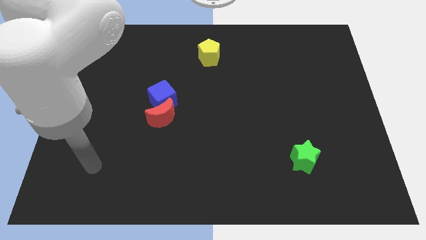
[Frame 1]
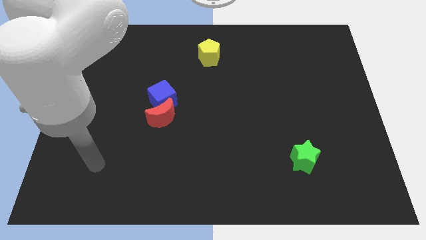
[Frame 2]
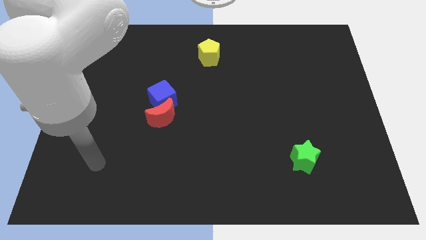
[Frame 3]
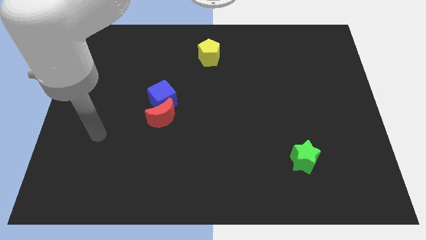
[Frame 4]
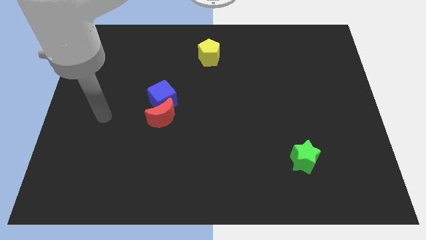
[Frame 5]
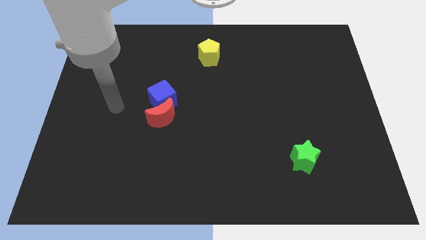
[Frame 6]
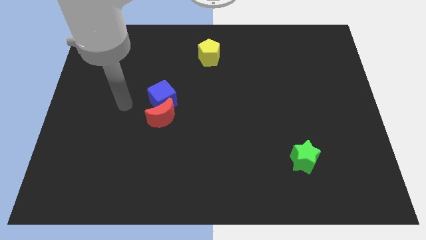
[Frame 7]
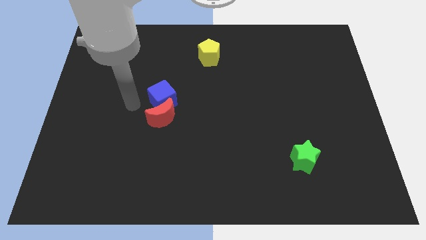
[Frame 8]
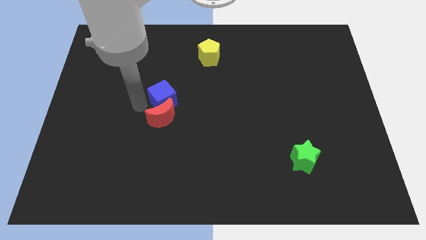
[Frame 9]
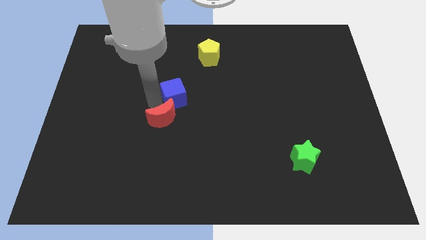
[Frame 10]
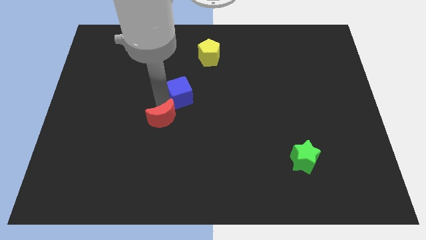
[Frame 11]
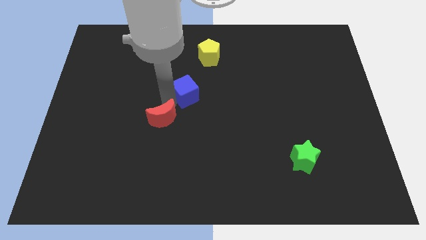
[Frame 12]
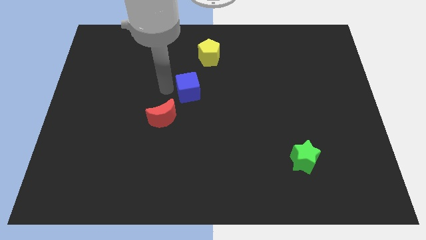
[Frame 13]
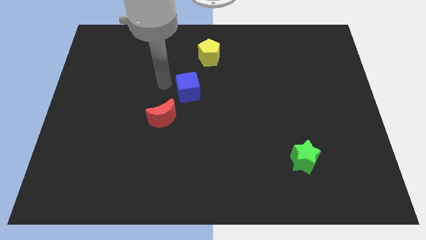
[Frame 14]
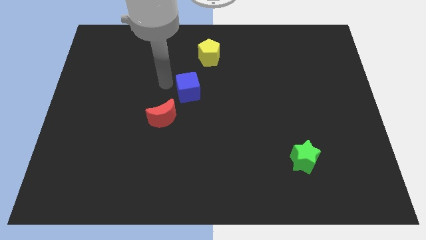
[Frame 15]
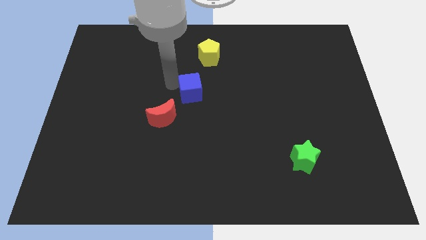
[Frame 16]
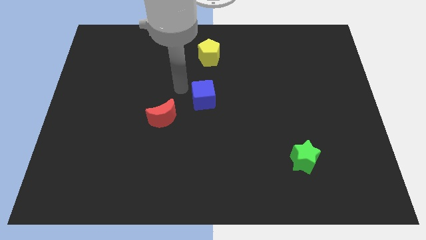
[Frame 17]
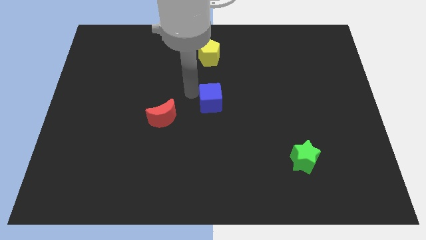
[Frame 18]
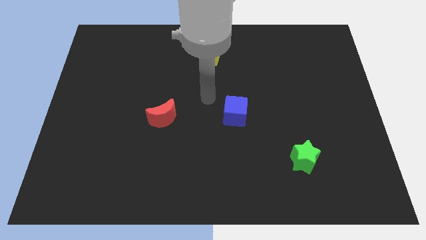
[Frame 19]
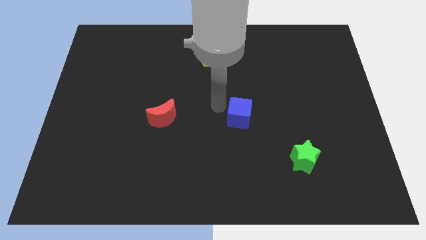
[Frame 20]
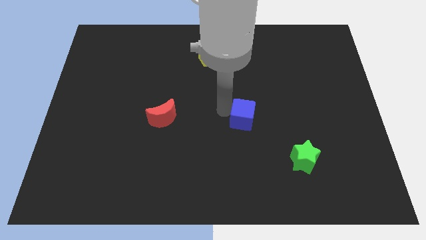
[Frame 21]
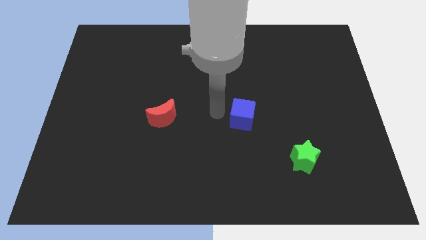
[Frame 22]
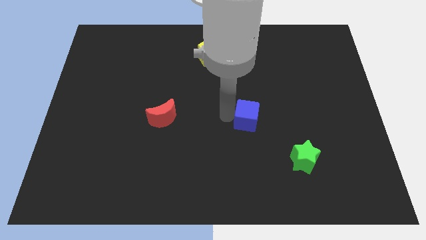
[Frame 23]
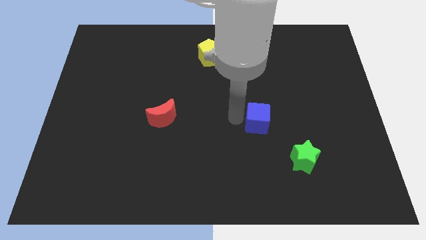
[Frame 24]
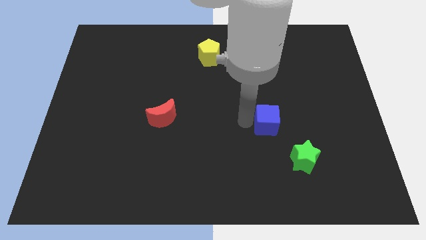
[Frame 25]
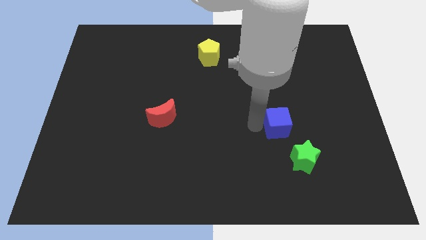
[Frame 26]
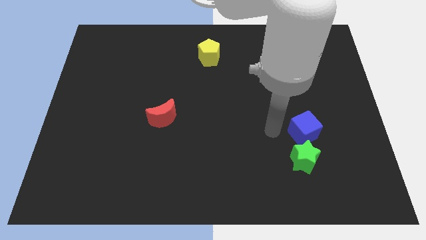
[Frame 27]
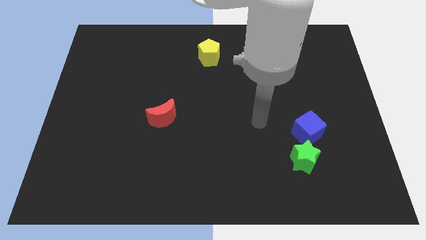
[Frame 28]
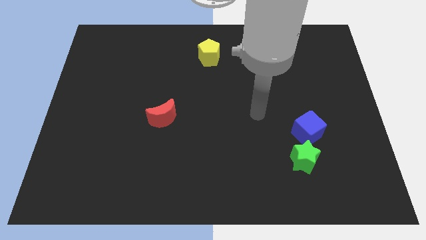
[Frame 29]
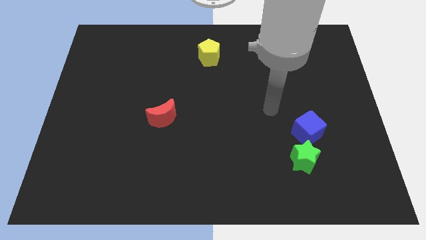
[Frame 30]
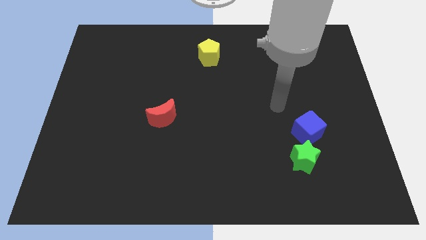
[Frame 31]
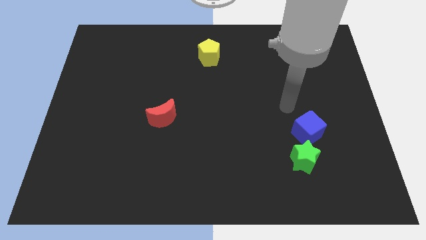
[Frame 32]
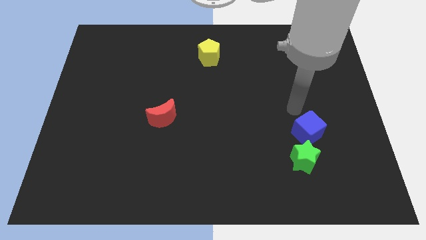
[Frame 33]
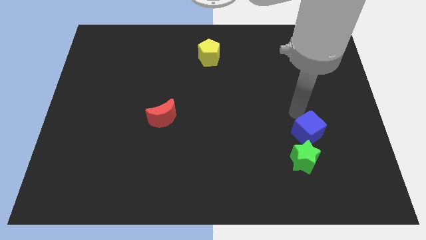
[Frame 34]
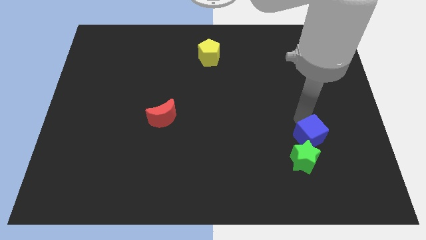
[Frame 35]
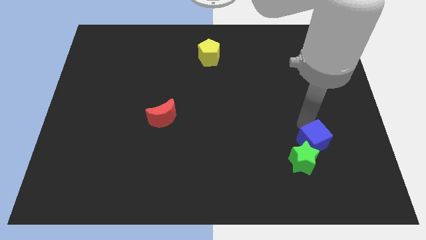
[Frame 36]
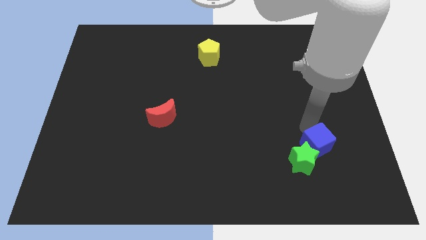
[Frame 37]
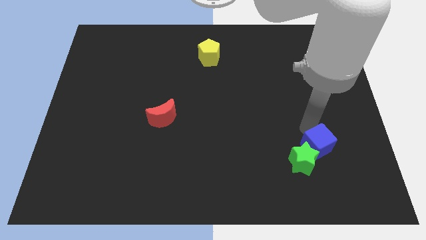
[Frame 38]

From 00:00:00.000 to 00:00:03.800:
put the blue block towards the green star

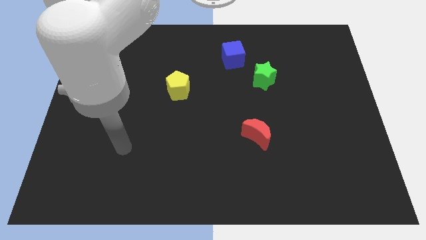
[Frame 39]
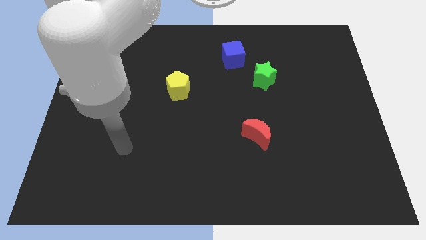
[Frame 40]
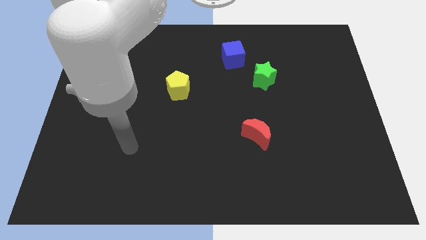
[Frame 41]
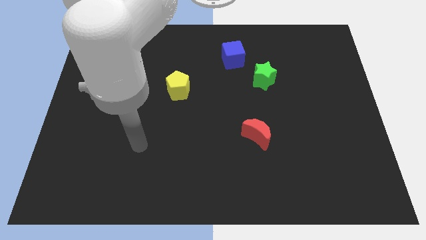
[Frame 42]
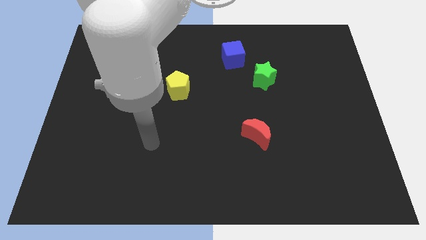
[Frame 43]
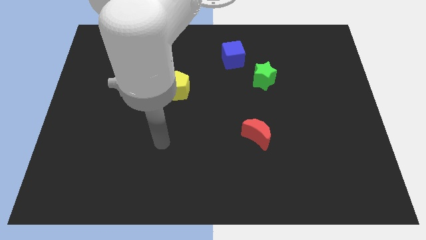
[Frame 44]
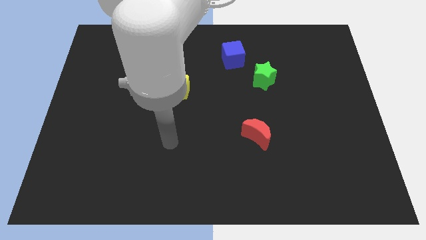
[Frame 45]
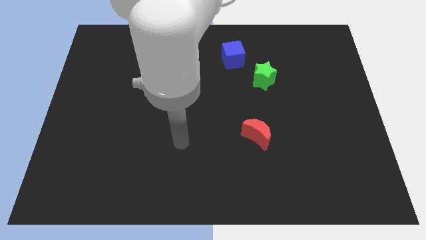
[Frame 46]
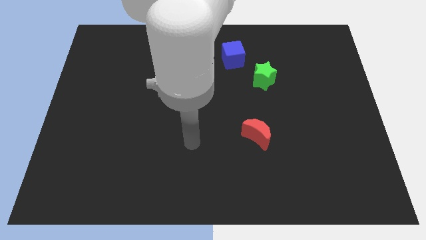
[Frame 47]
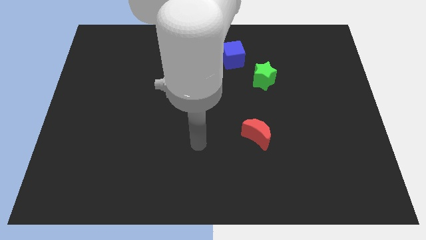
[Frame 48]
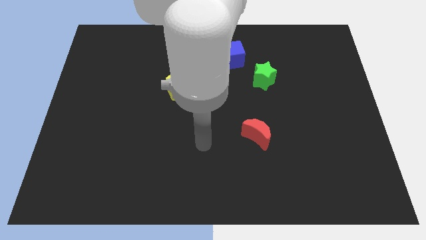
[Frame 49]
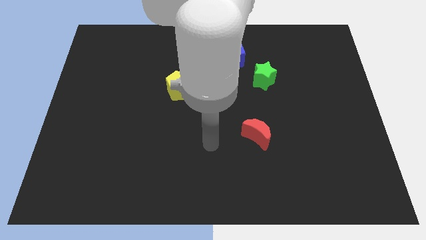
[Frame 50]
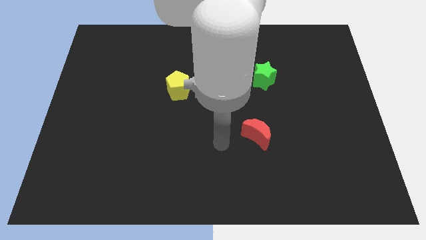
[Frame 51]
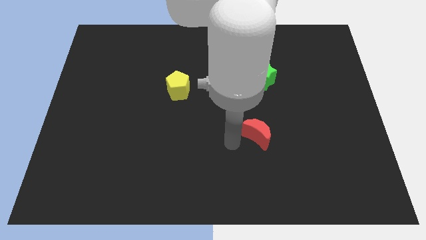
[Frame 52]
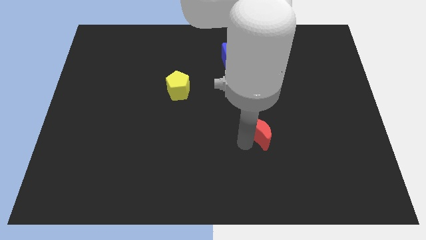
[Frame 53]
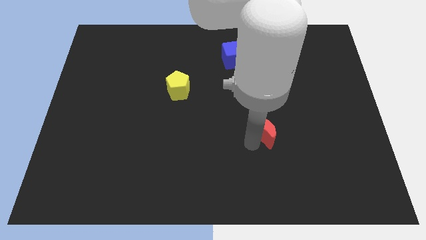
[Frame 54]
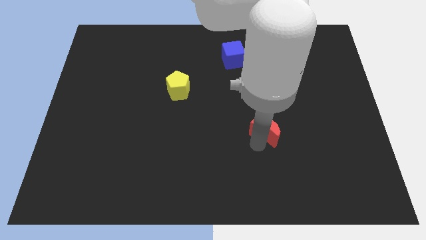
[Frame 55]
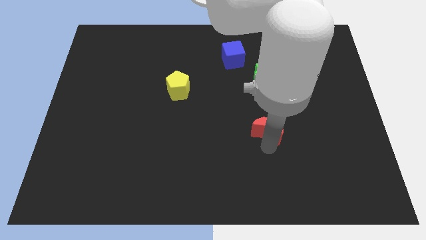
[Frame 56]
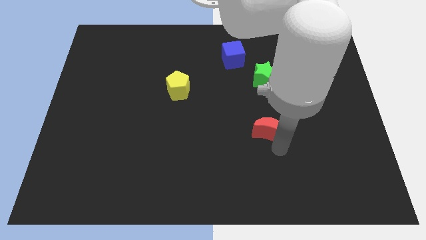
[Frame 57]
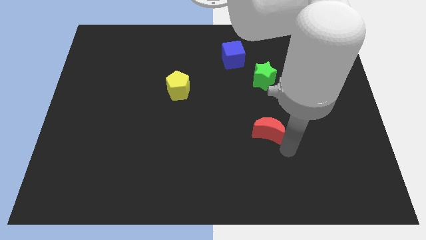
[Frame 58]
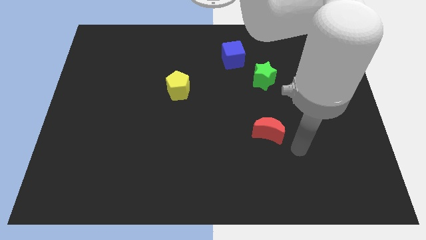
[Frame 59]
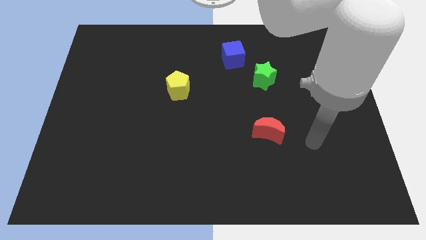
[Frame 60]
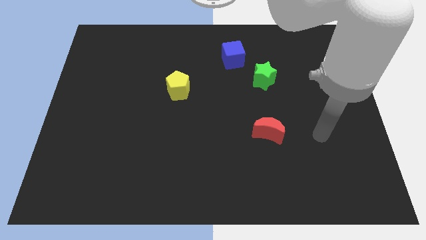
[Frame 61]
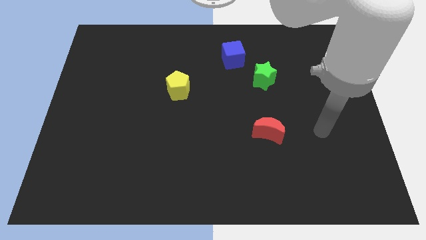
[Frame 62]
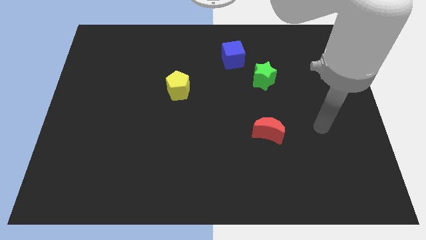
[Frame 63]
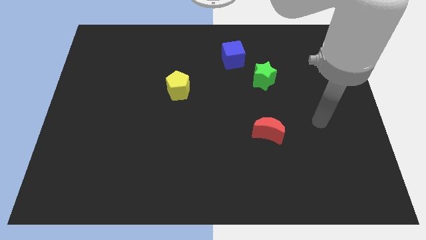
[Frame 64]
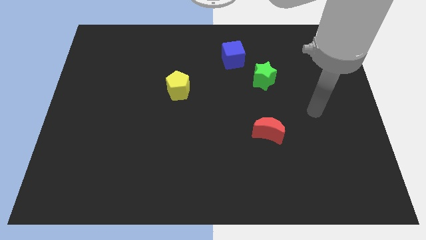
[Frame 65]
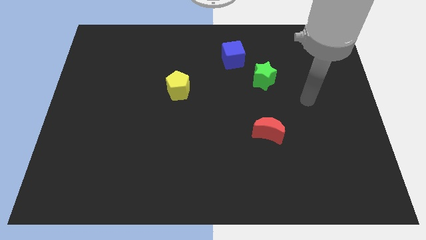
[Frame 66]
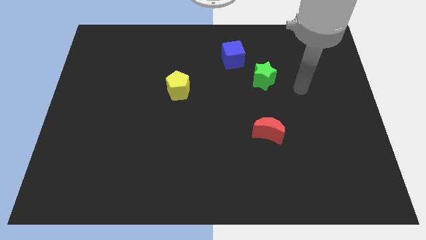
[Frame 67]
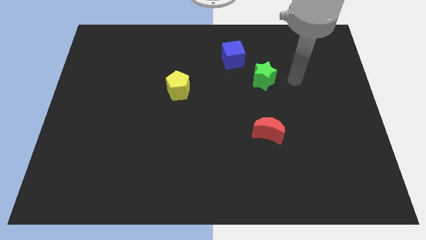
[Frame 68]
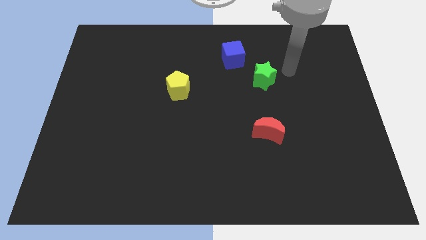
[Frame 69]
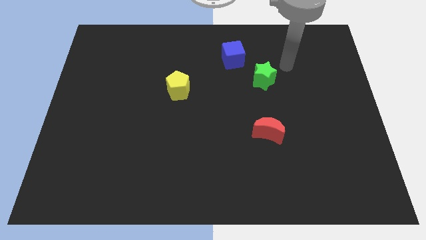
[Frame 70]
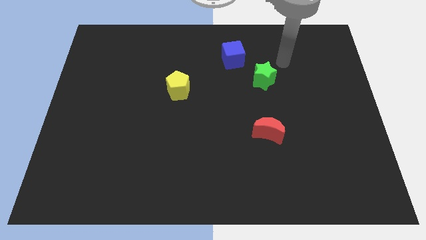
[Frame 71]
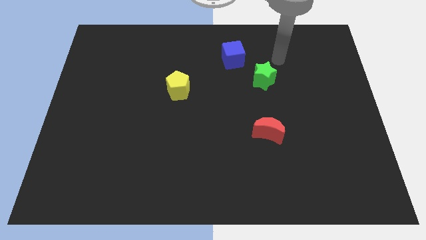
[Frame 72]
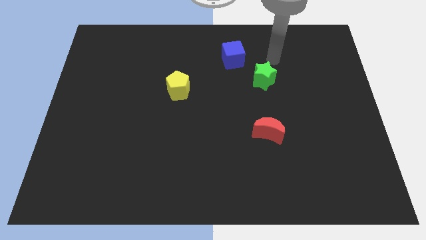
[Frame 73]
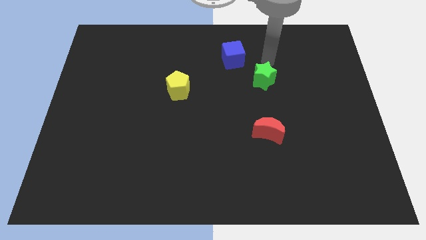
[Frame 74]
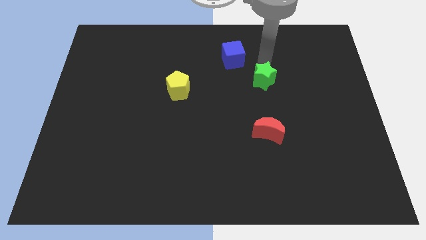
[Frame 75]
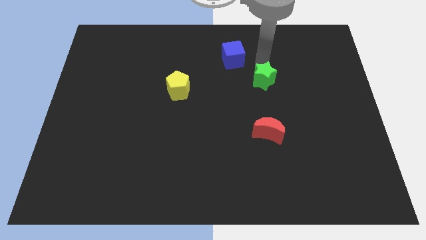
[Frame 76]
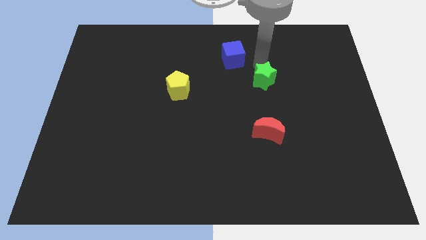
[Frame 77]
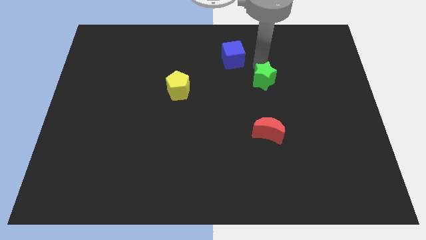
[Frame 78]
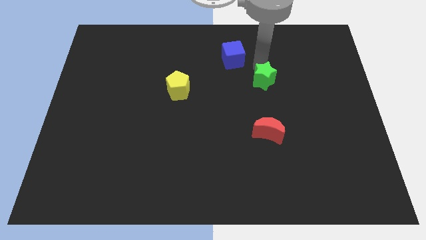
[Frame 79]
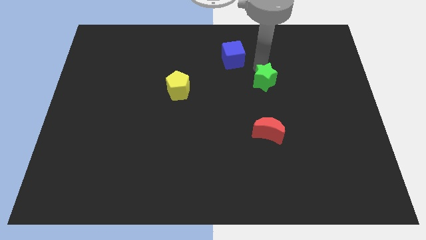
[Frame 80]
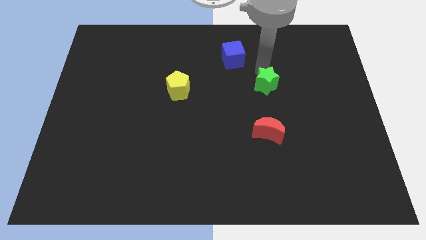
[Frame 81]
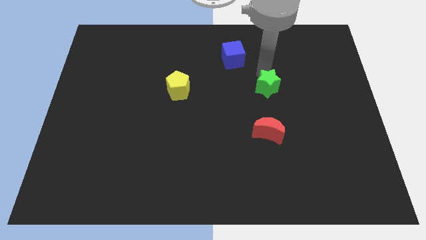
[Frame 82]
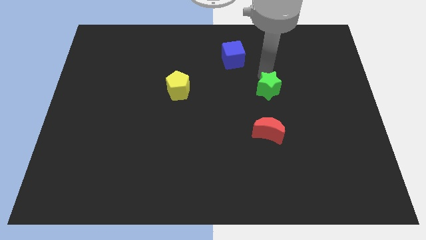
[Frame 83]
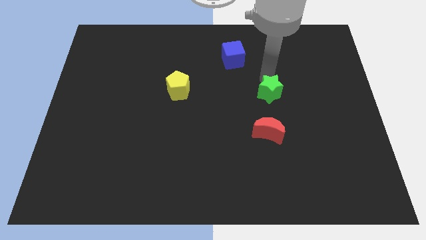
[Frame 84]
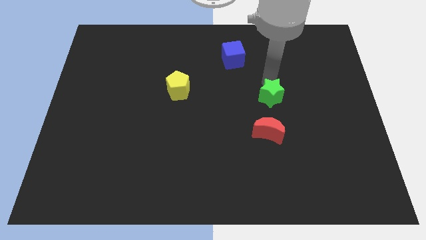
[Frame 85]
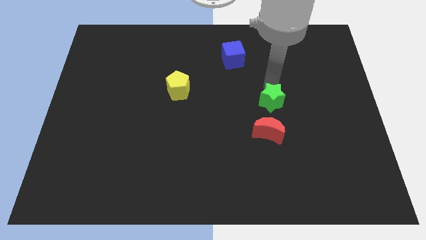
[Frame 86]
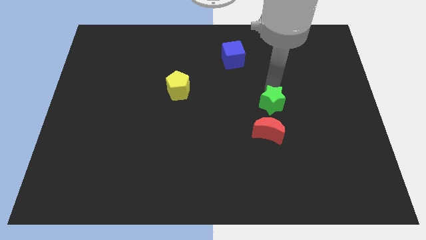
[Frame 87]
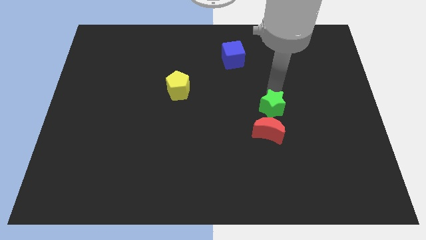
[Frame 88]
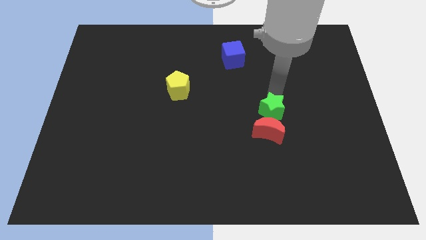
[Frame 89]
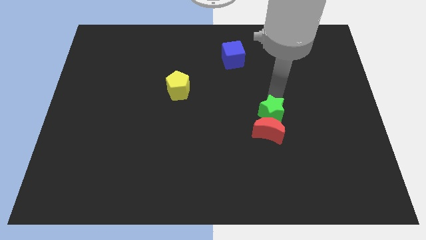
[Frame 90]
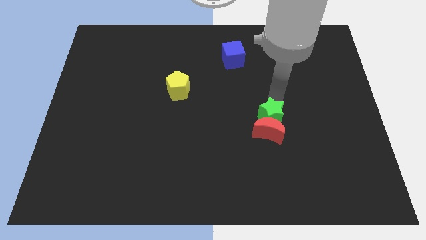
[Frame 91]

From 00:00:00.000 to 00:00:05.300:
slide the star next to the red block
